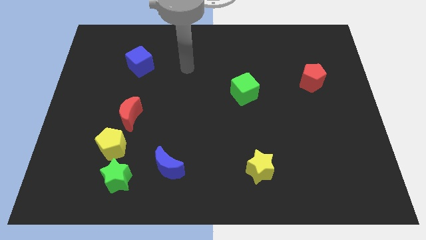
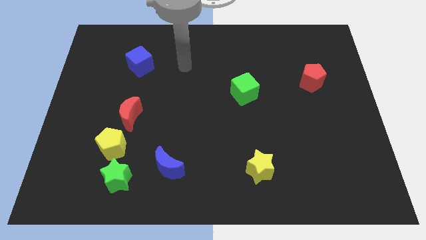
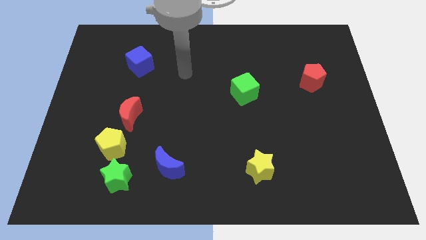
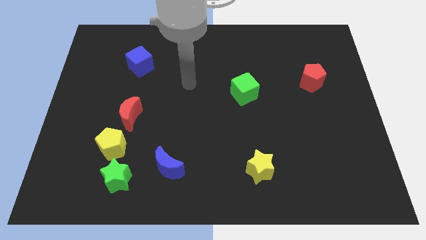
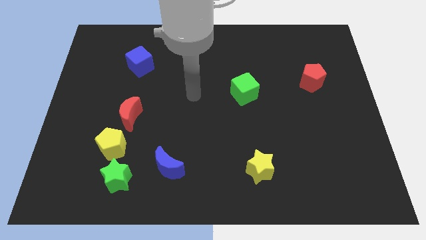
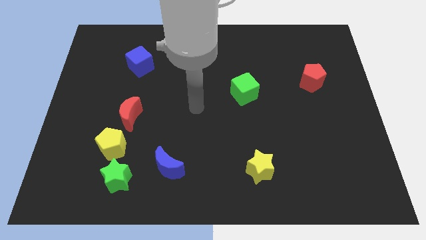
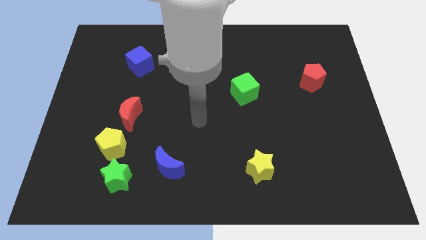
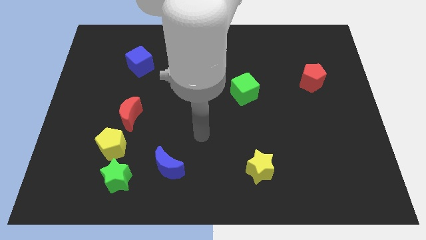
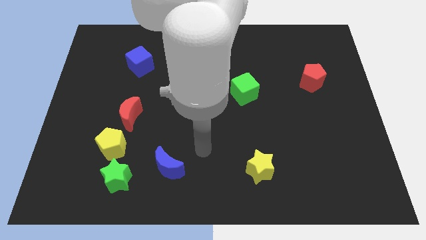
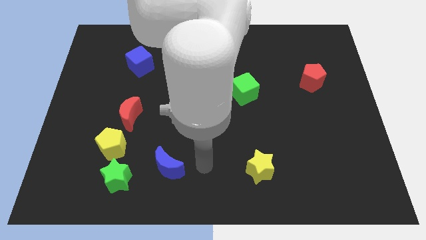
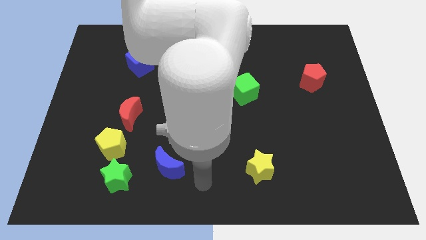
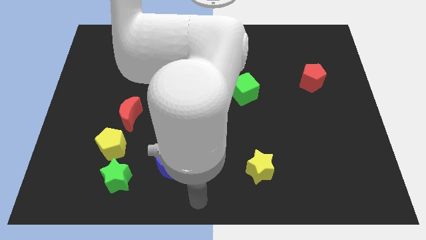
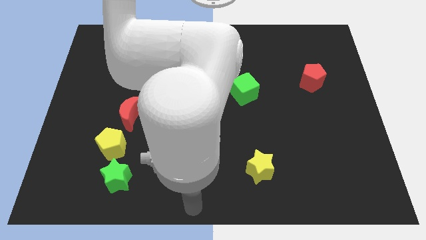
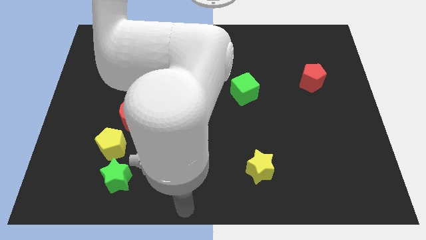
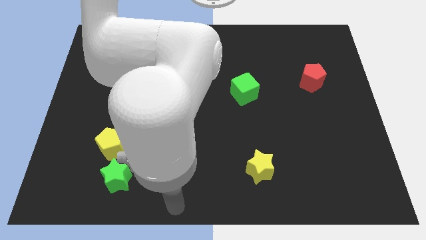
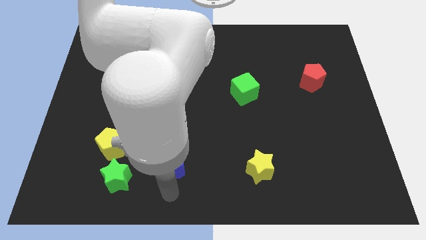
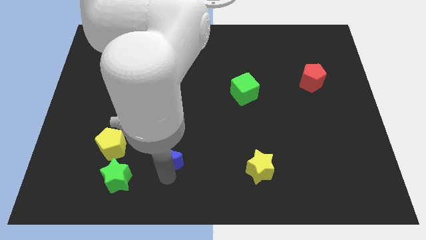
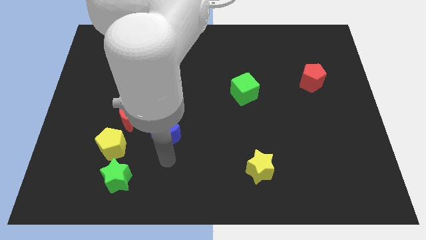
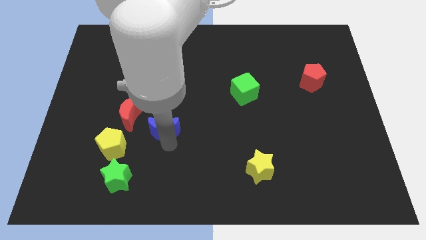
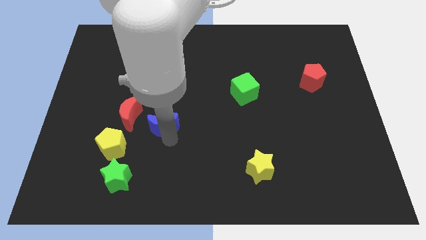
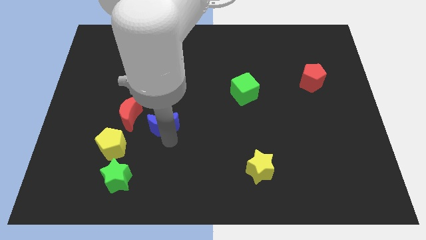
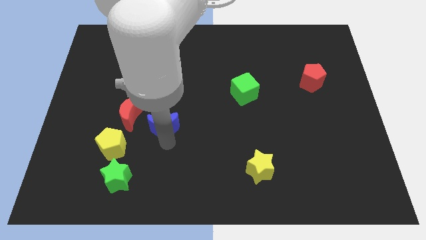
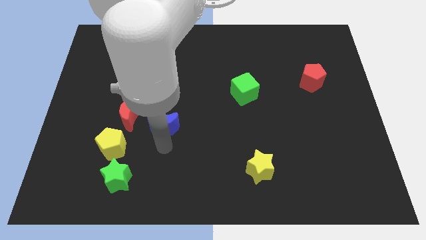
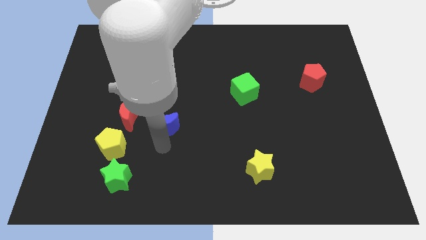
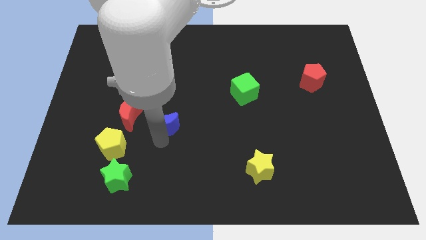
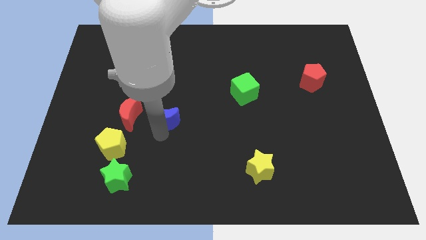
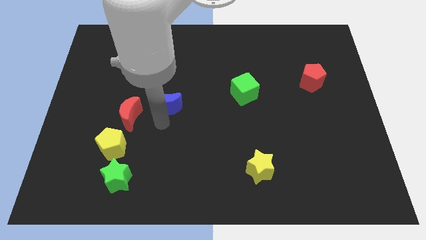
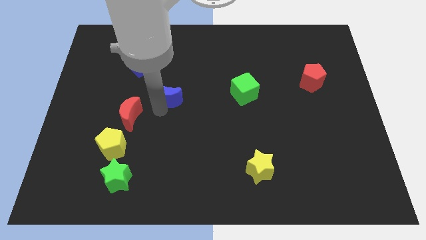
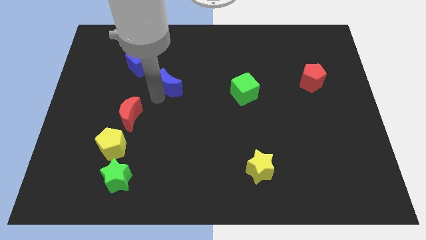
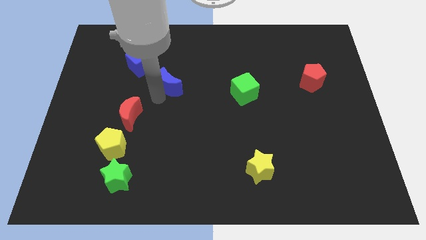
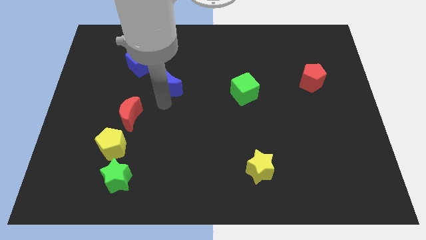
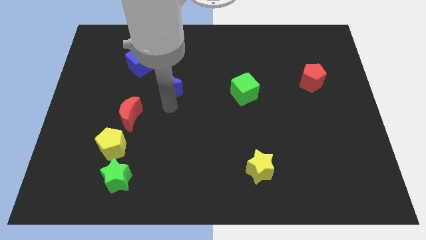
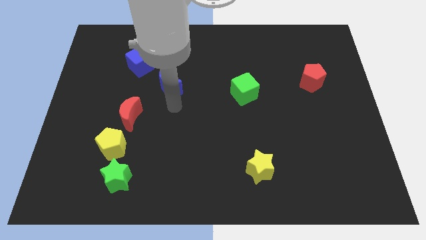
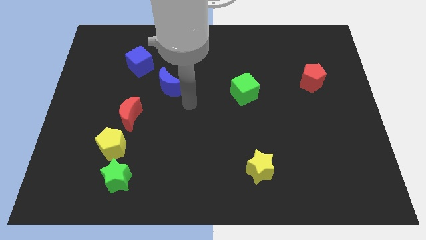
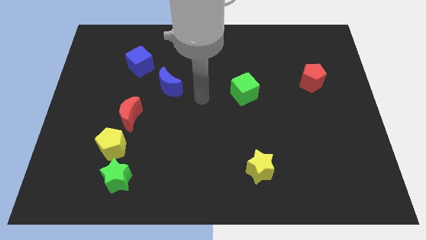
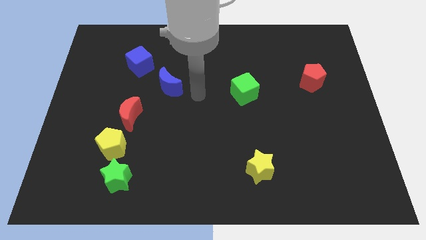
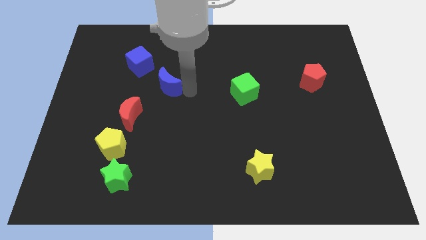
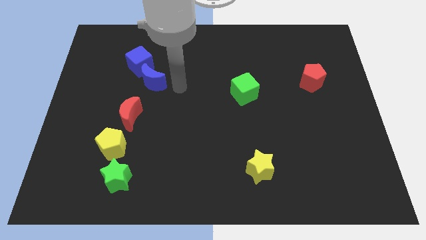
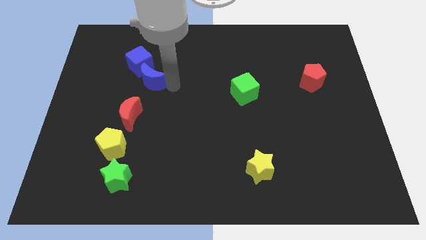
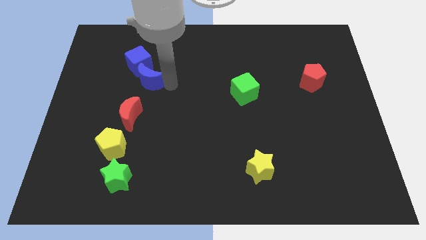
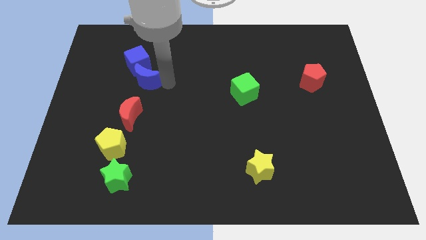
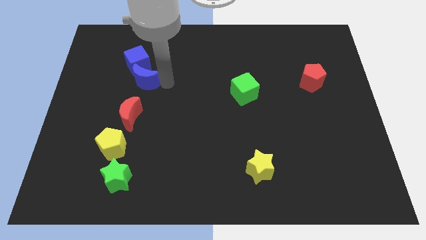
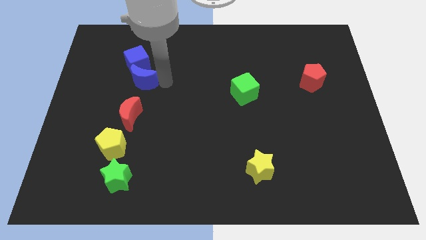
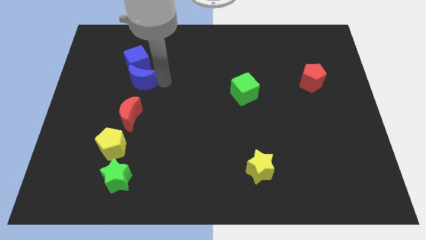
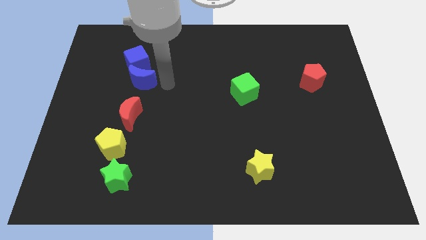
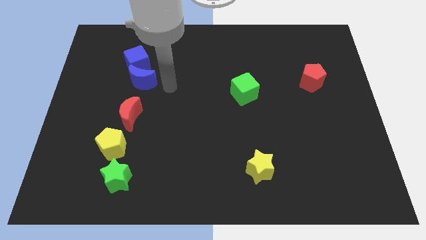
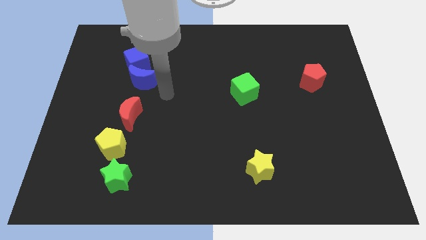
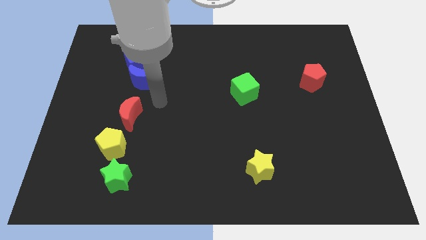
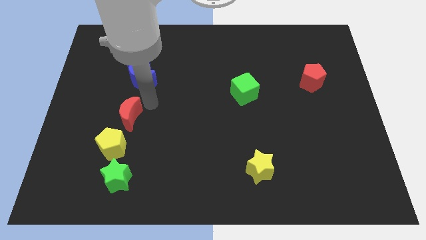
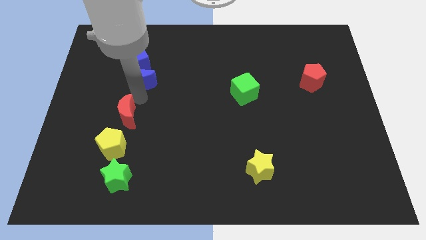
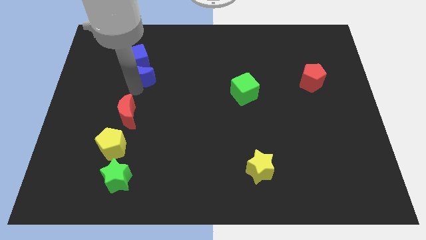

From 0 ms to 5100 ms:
place the blue moon at the bottom of the blue cube

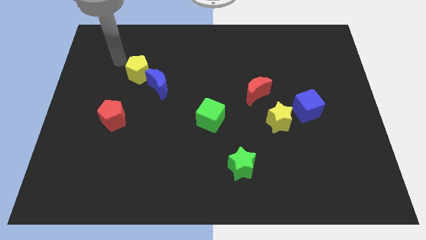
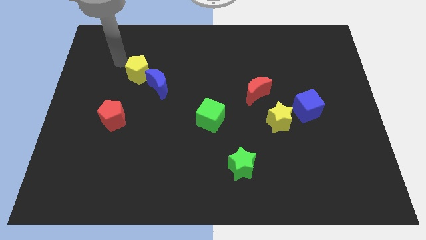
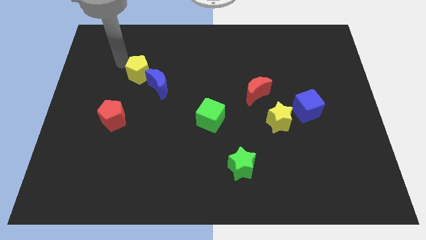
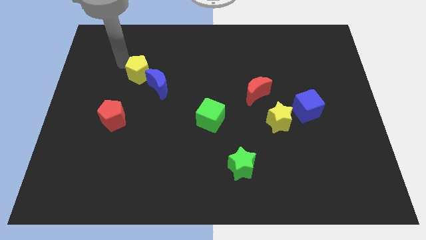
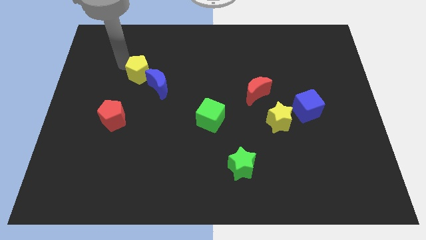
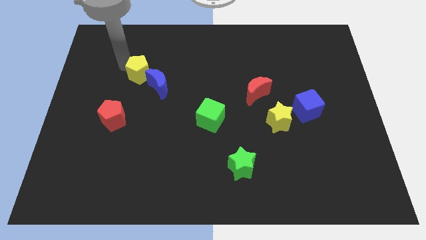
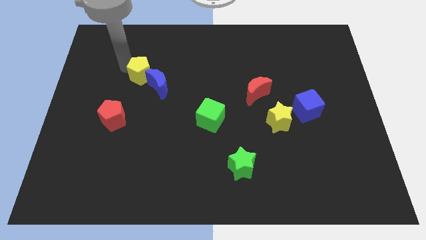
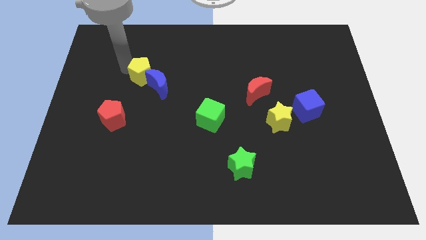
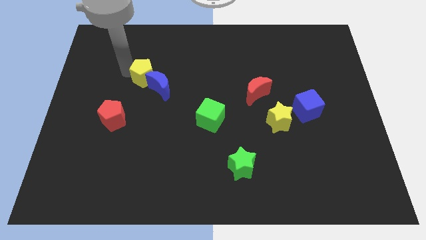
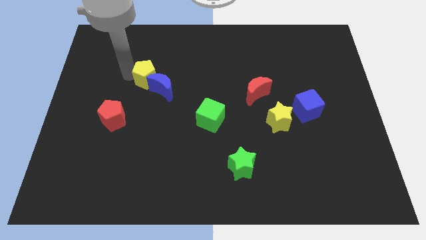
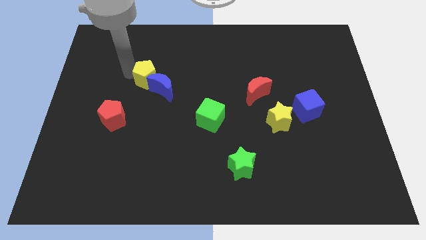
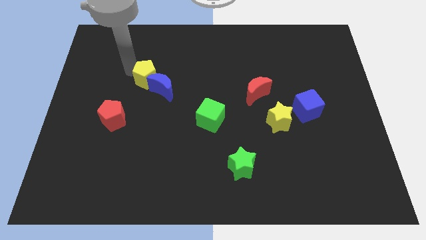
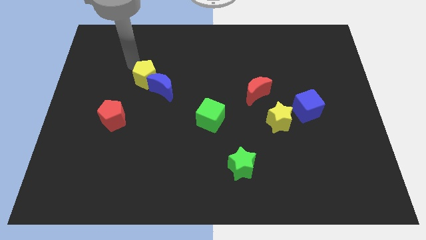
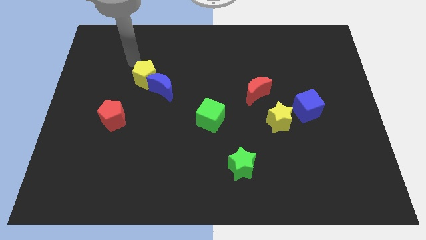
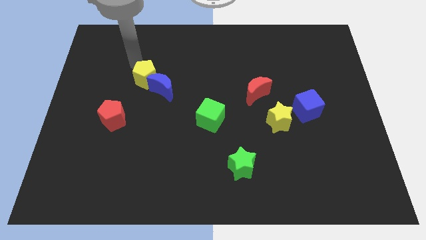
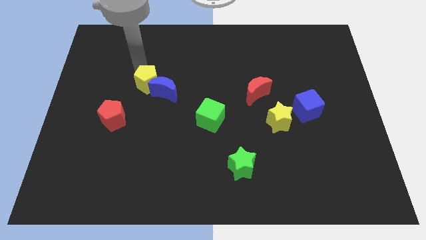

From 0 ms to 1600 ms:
move the yellow pentagon into the blue crescent

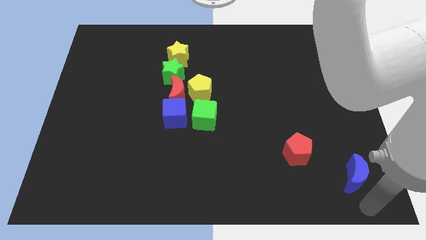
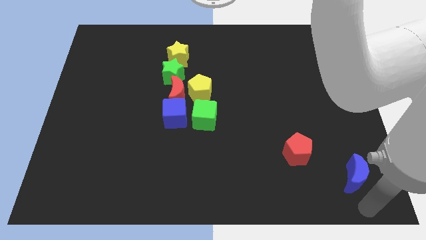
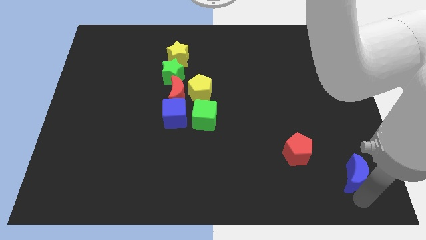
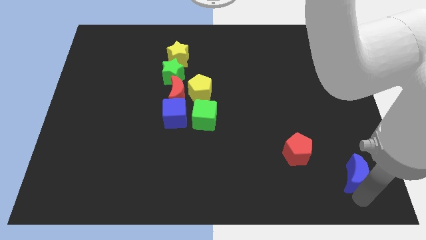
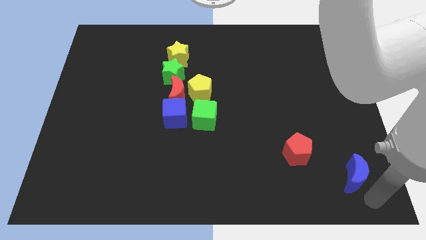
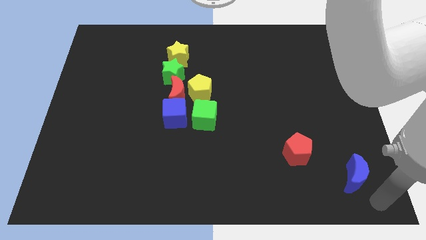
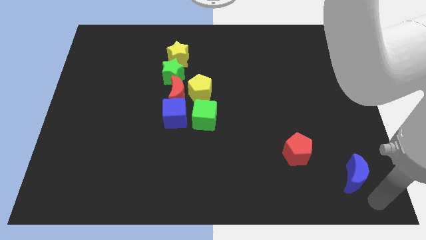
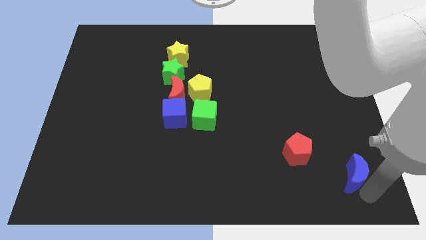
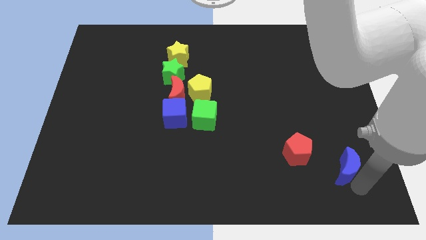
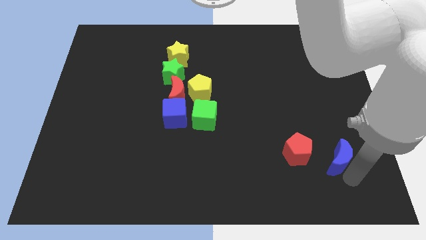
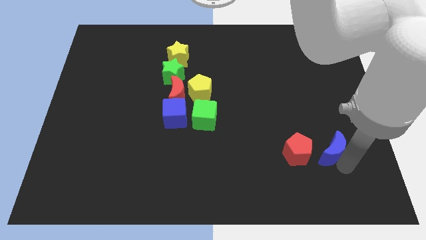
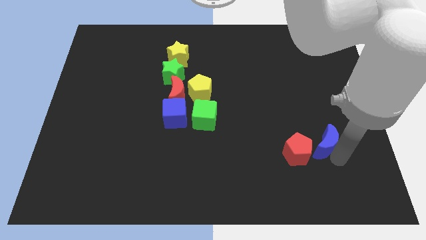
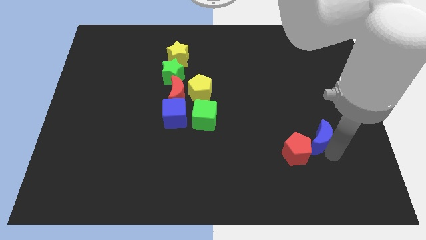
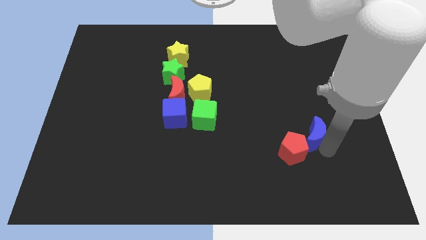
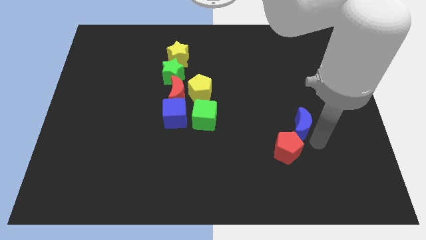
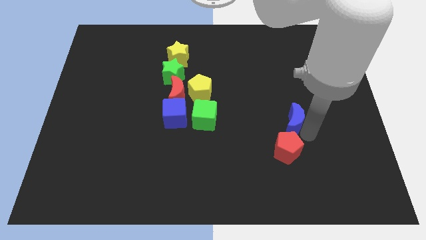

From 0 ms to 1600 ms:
move the blue moon into the red pentagon

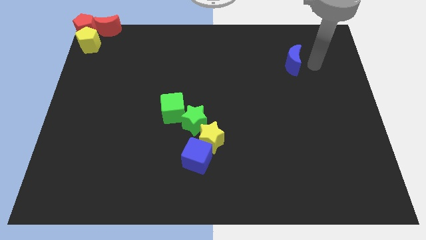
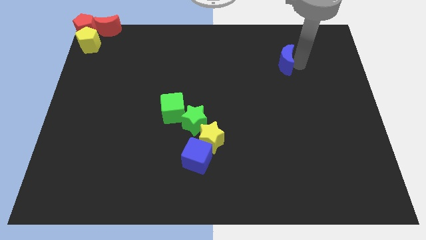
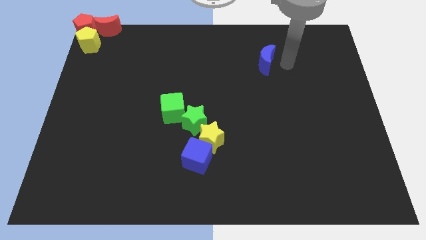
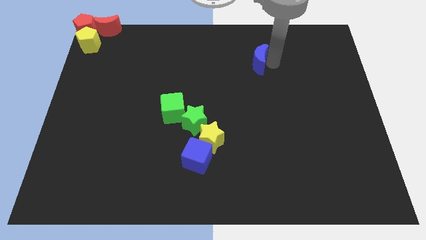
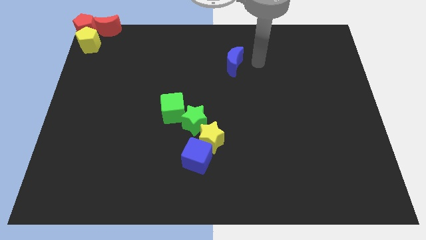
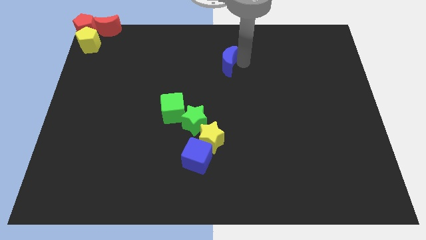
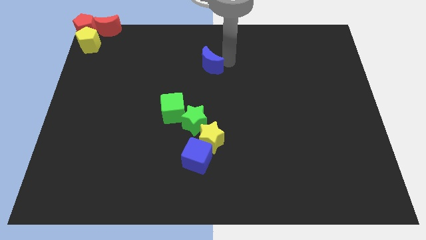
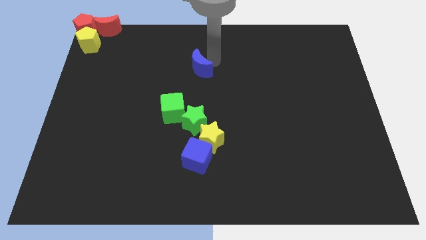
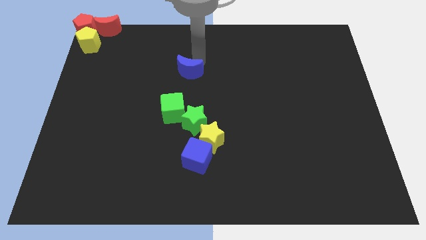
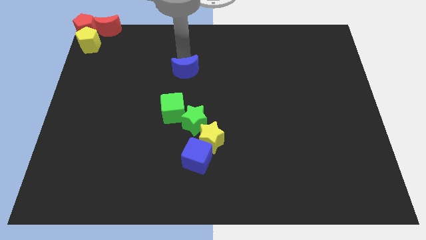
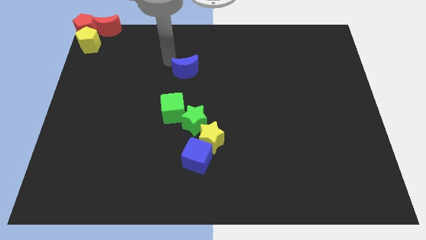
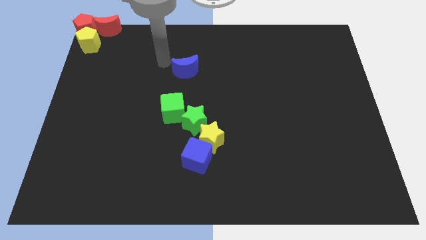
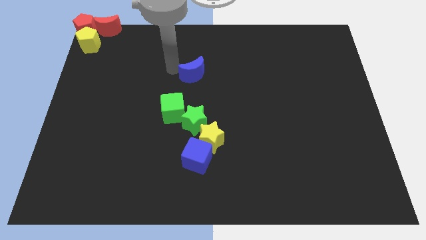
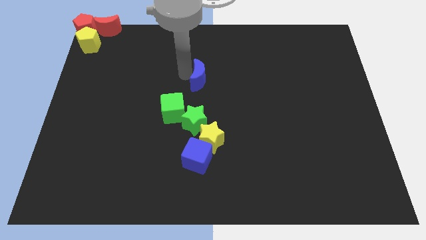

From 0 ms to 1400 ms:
push the blue moon to the left side of the board
